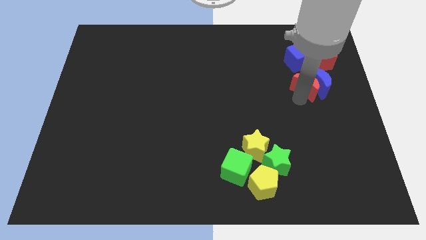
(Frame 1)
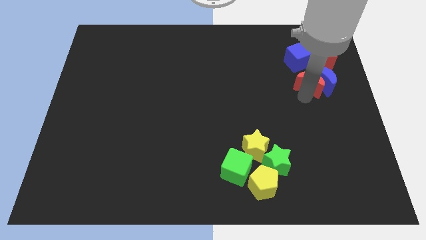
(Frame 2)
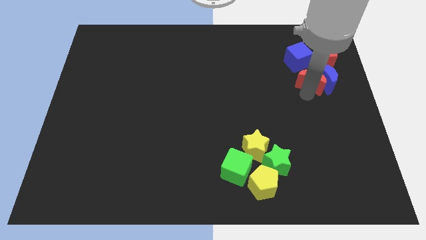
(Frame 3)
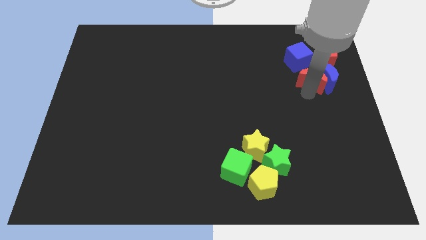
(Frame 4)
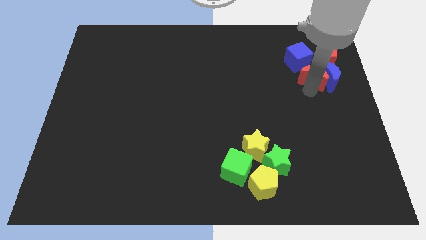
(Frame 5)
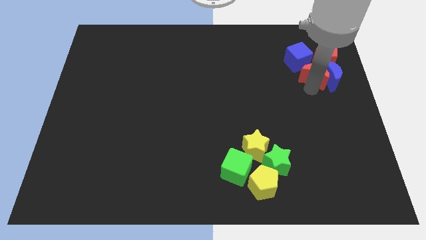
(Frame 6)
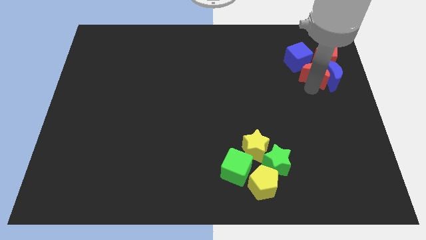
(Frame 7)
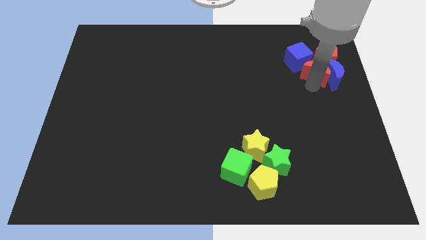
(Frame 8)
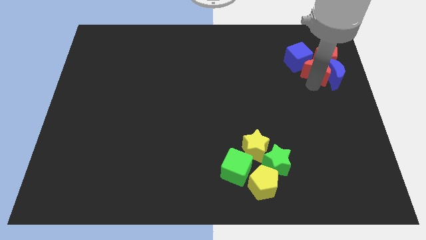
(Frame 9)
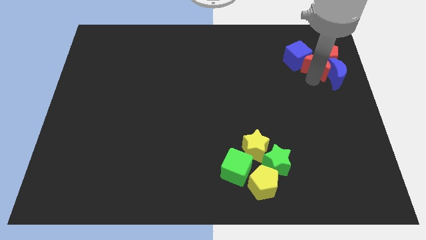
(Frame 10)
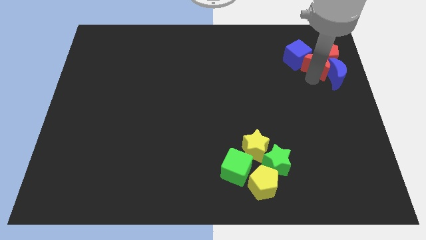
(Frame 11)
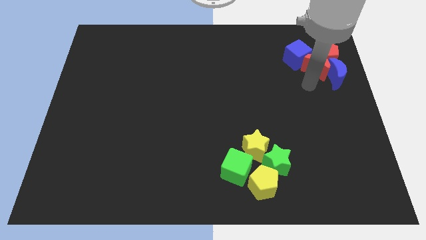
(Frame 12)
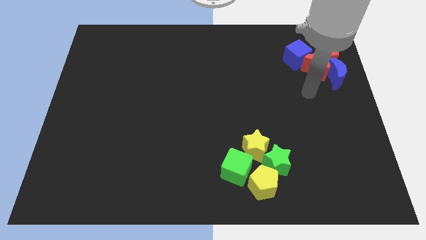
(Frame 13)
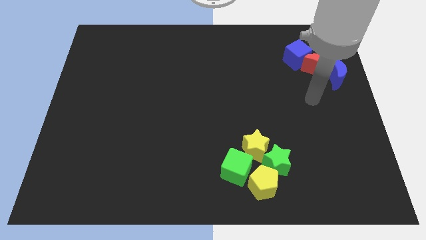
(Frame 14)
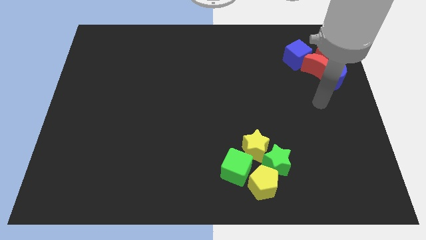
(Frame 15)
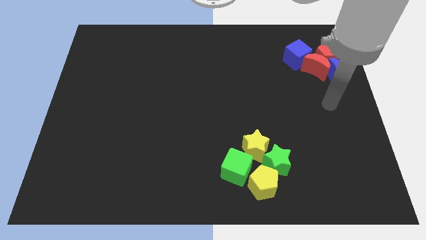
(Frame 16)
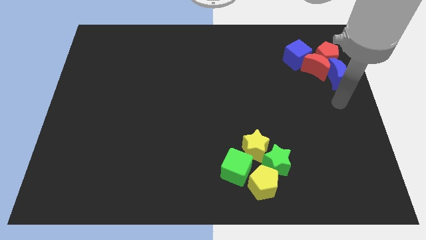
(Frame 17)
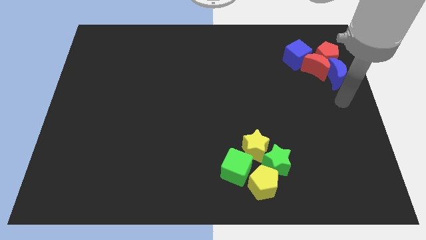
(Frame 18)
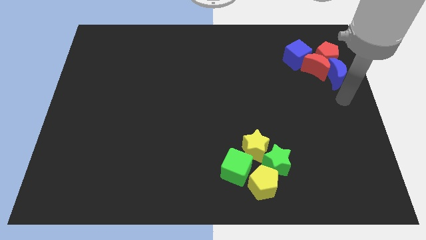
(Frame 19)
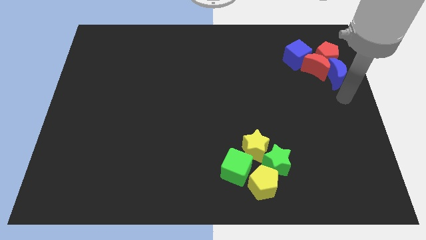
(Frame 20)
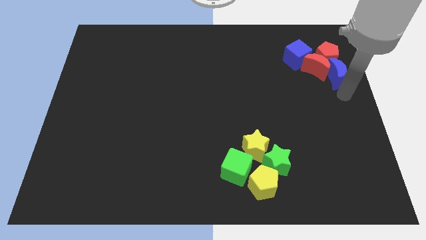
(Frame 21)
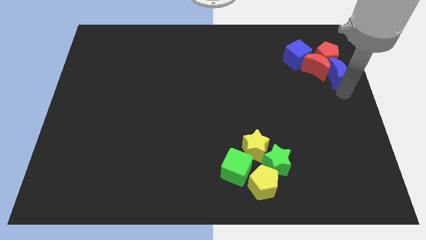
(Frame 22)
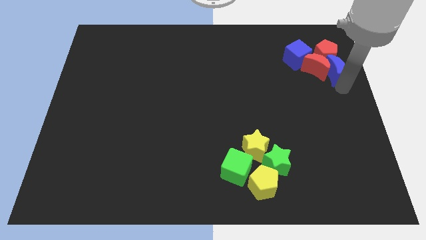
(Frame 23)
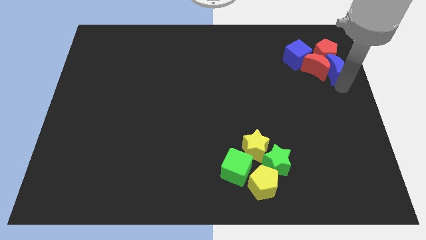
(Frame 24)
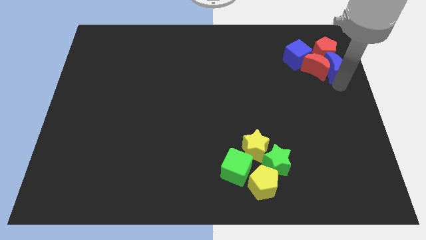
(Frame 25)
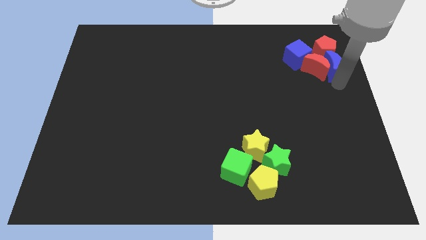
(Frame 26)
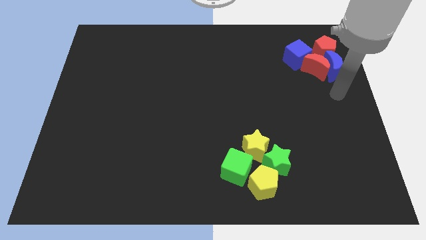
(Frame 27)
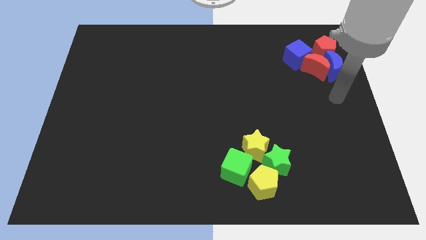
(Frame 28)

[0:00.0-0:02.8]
move blue moon slightly up

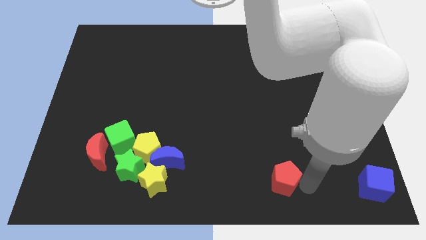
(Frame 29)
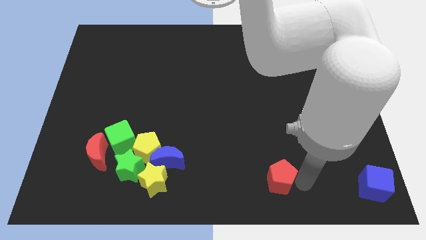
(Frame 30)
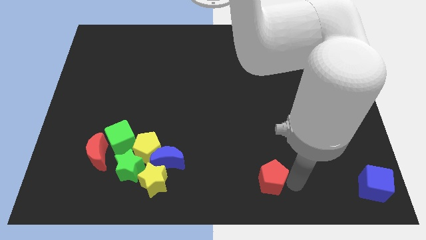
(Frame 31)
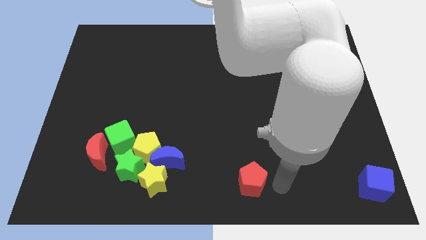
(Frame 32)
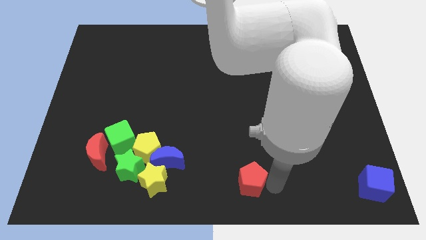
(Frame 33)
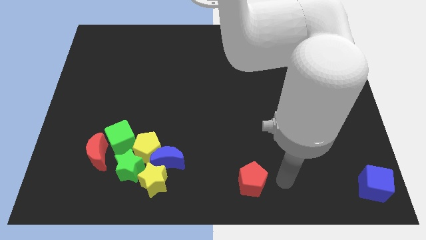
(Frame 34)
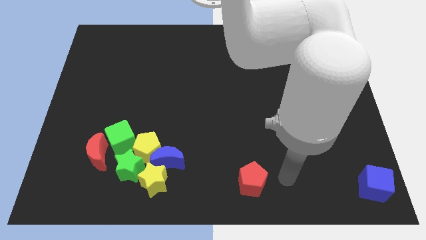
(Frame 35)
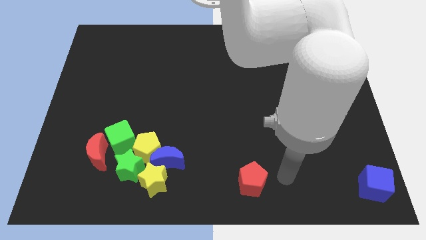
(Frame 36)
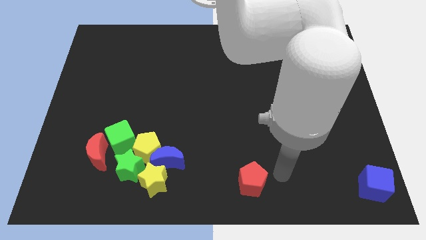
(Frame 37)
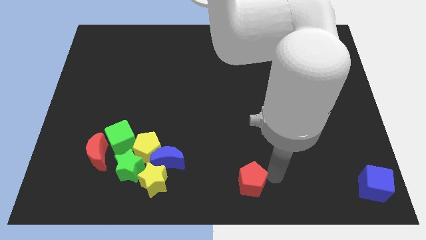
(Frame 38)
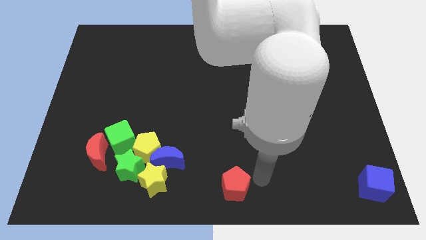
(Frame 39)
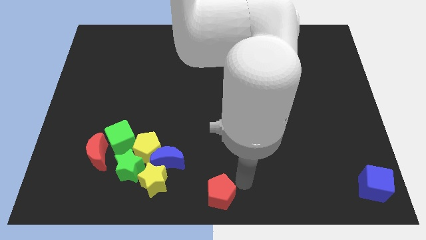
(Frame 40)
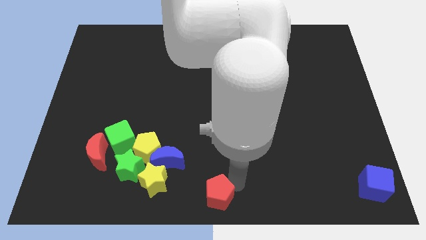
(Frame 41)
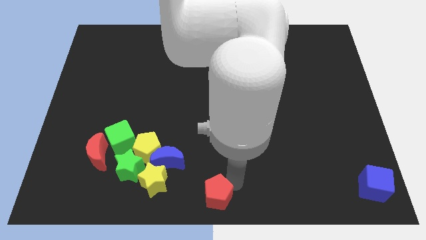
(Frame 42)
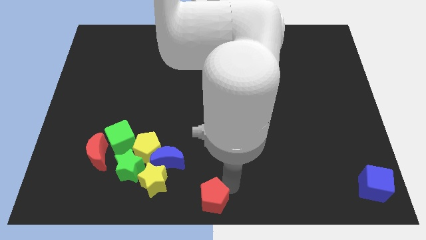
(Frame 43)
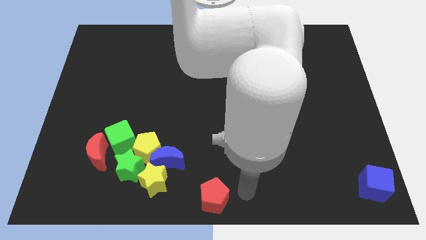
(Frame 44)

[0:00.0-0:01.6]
push the red pentagon to the bottom center of the board

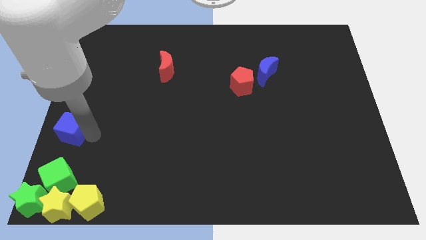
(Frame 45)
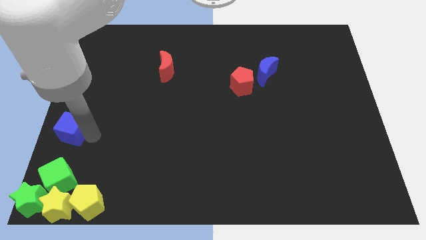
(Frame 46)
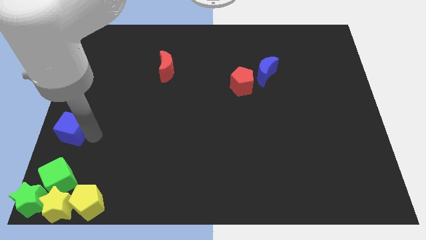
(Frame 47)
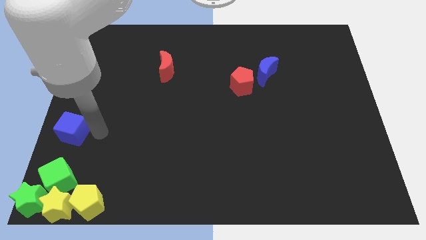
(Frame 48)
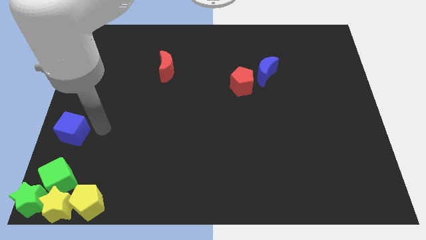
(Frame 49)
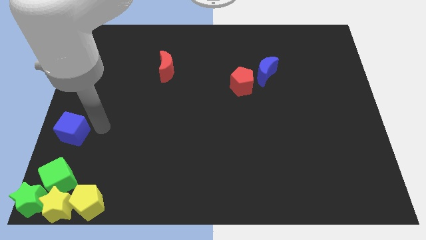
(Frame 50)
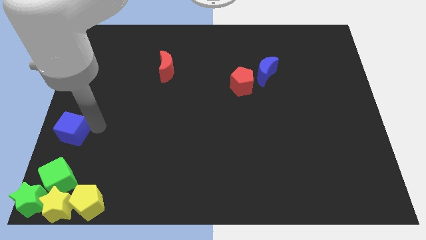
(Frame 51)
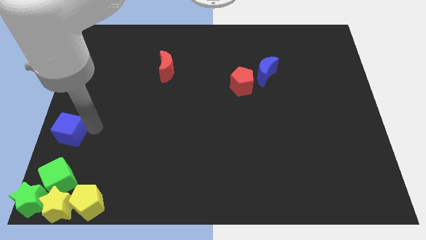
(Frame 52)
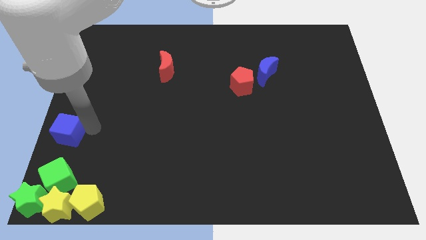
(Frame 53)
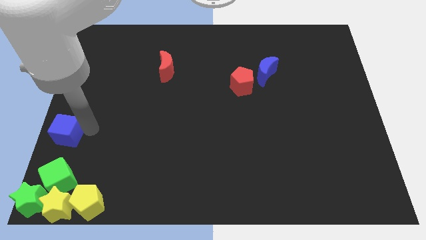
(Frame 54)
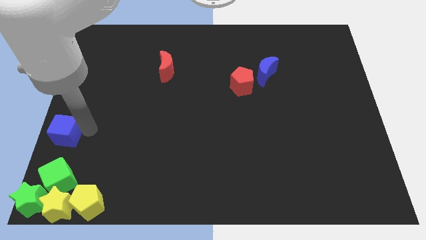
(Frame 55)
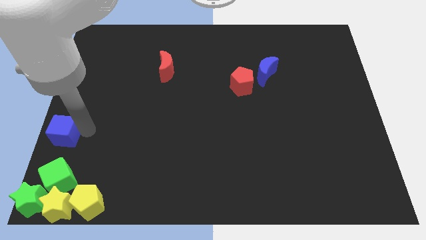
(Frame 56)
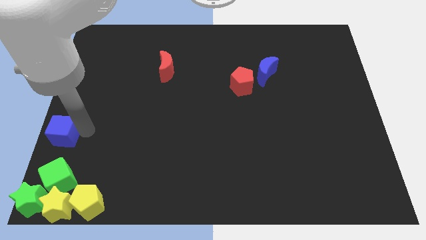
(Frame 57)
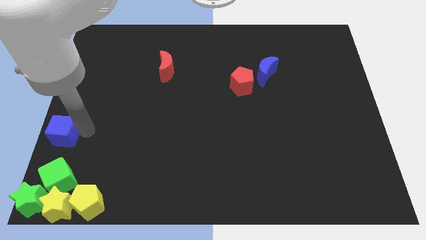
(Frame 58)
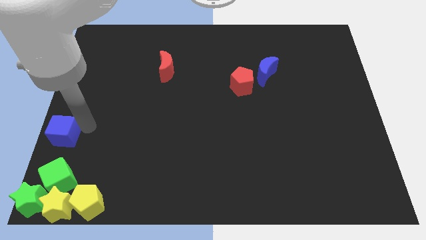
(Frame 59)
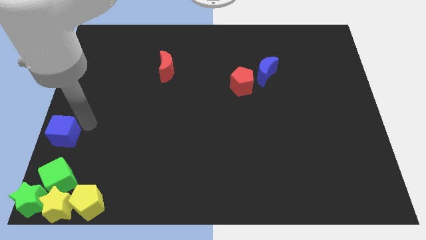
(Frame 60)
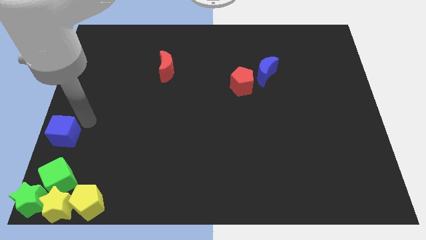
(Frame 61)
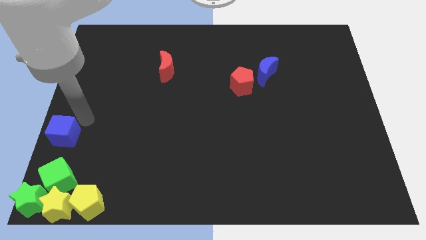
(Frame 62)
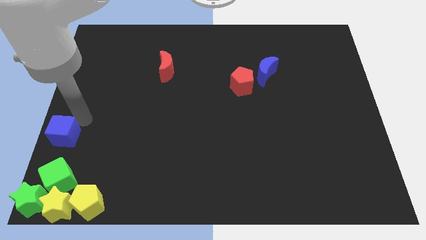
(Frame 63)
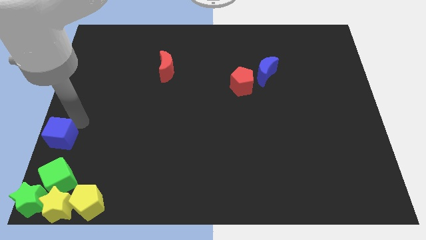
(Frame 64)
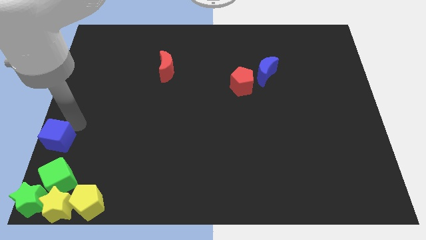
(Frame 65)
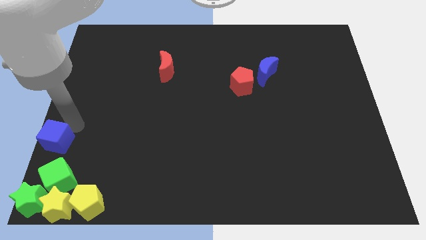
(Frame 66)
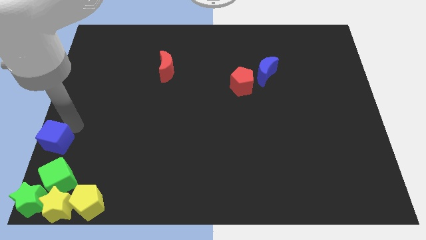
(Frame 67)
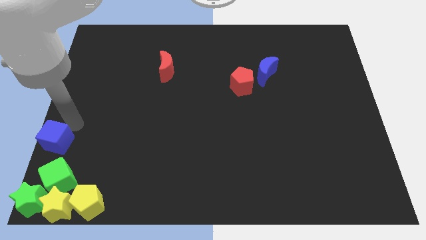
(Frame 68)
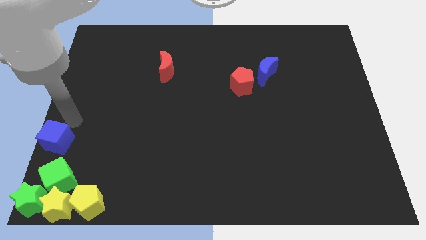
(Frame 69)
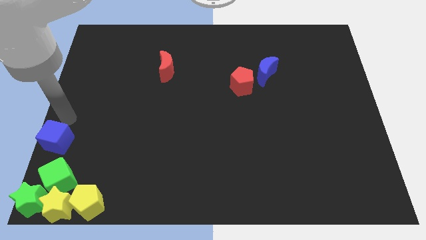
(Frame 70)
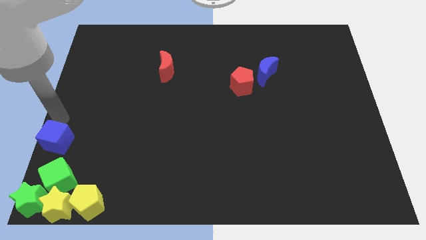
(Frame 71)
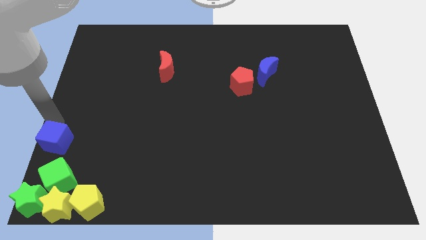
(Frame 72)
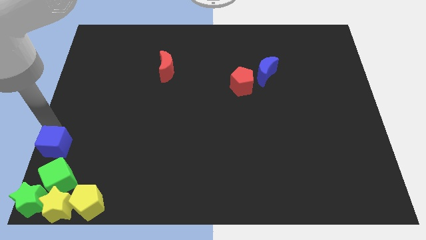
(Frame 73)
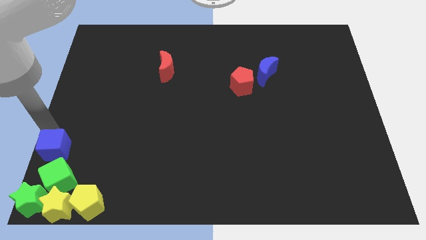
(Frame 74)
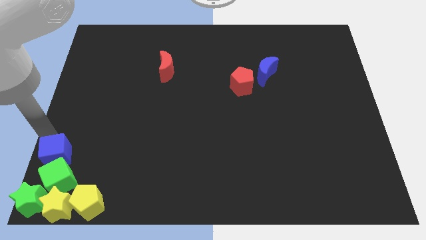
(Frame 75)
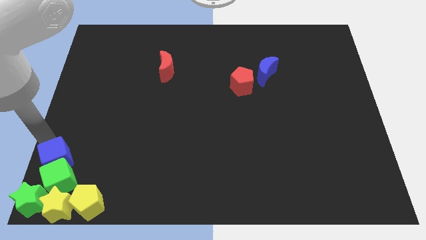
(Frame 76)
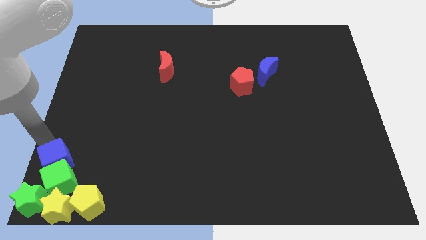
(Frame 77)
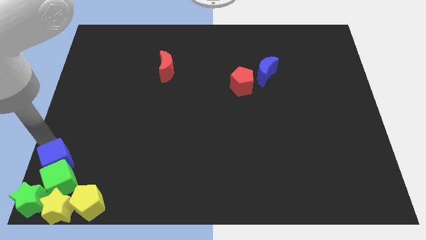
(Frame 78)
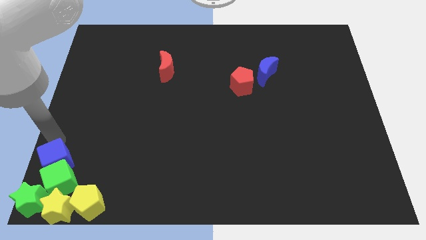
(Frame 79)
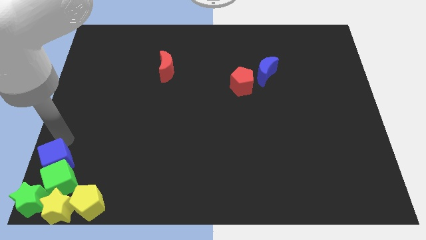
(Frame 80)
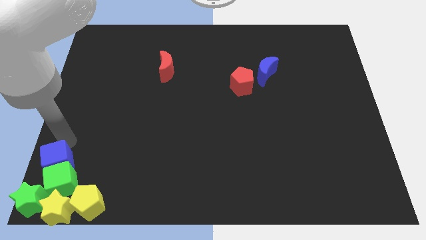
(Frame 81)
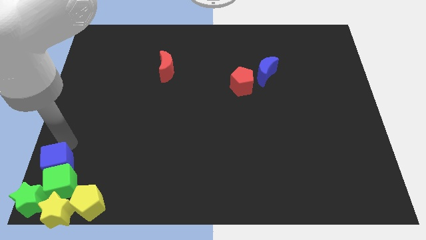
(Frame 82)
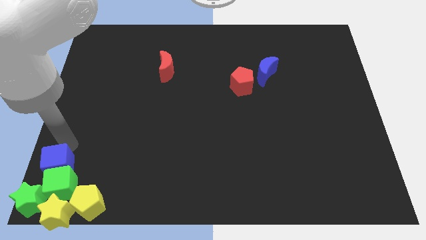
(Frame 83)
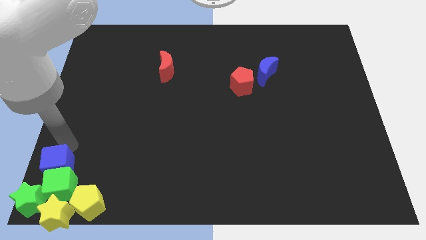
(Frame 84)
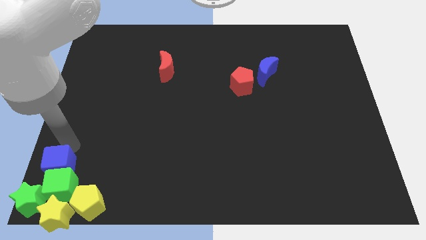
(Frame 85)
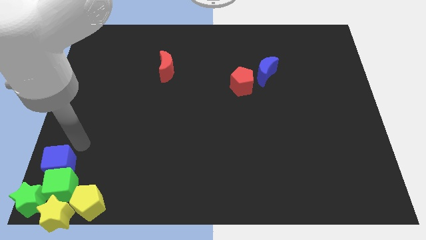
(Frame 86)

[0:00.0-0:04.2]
push the blue cube into the green cube

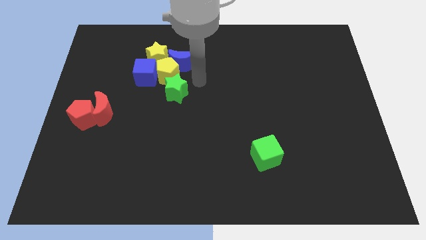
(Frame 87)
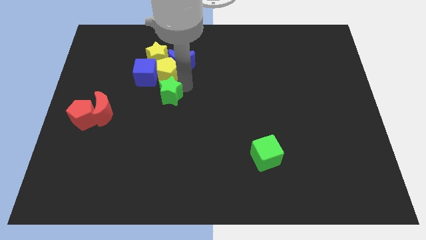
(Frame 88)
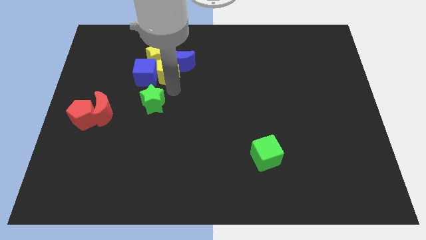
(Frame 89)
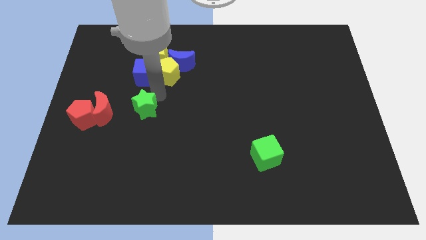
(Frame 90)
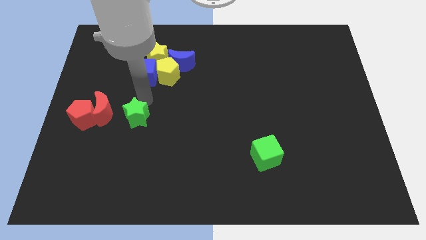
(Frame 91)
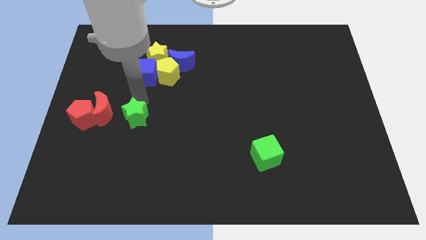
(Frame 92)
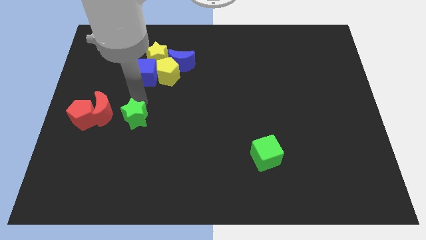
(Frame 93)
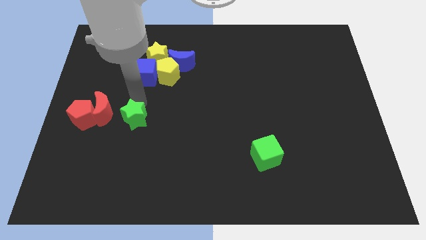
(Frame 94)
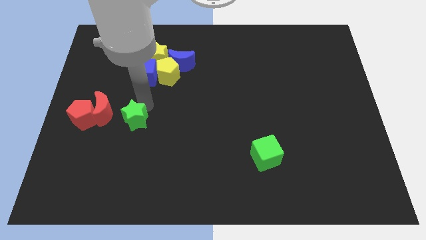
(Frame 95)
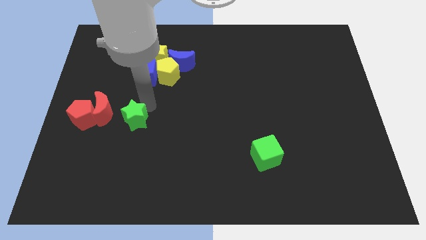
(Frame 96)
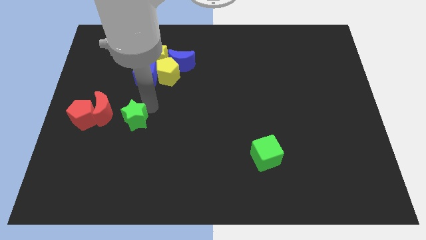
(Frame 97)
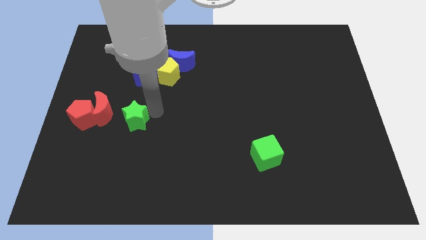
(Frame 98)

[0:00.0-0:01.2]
move the green star right to the red crescent
